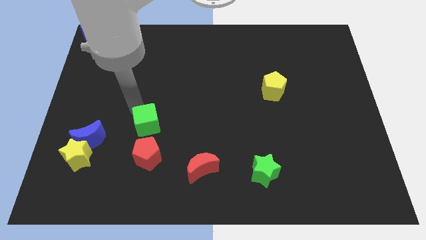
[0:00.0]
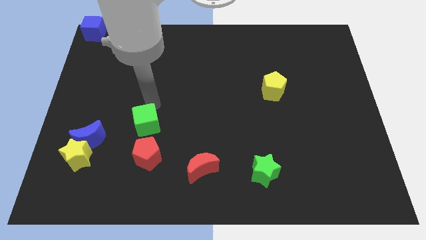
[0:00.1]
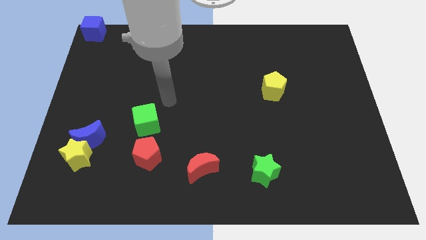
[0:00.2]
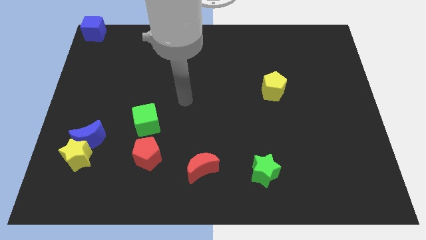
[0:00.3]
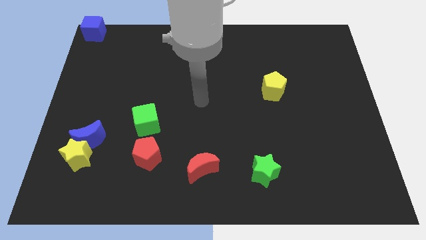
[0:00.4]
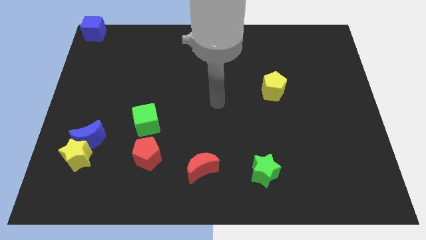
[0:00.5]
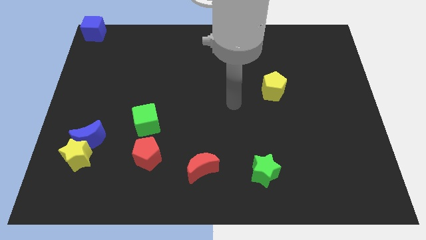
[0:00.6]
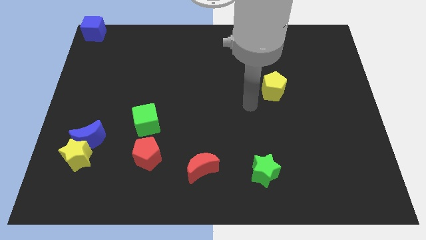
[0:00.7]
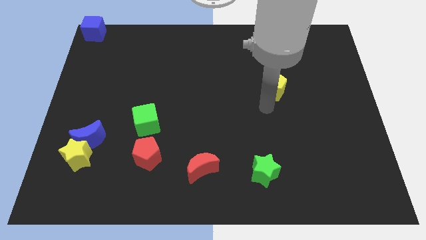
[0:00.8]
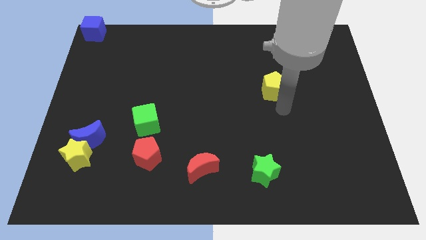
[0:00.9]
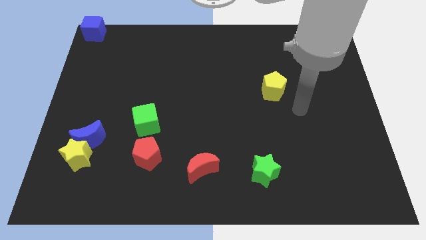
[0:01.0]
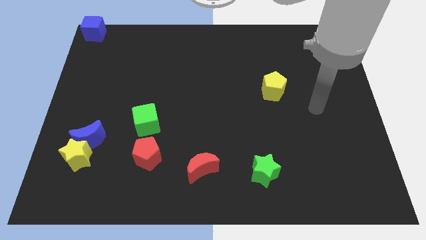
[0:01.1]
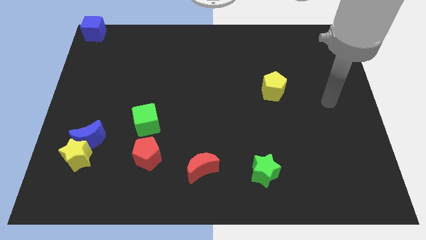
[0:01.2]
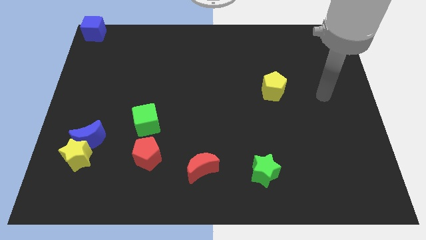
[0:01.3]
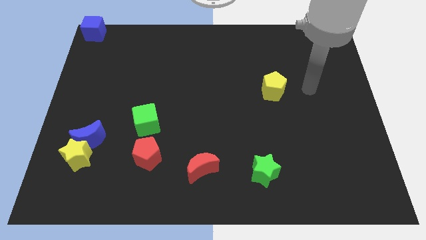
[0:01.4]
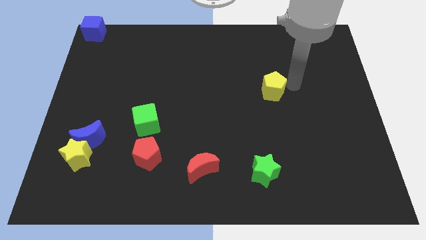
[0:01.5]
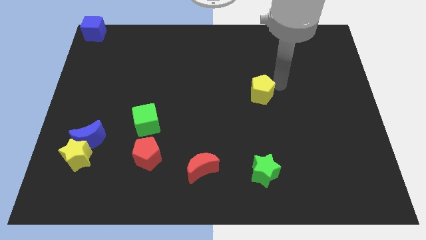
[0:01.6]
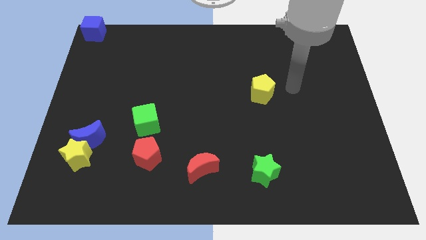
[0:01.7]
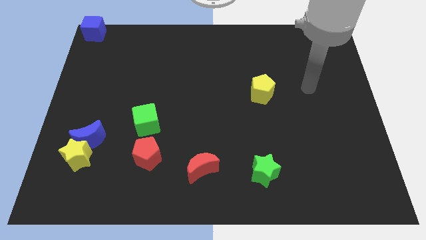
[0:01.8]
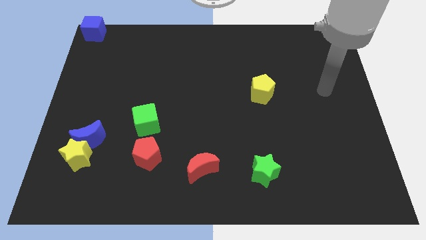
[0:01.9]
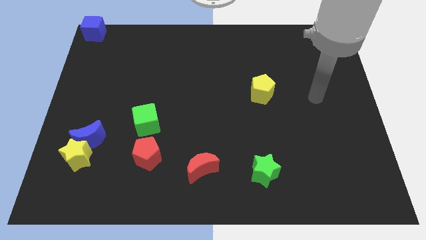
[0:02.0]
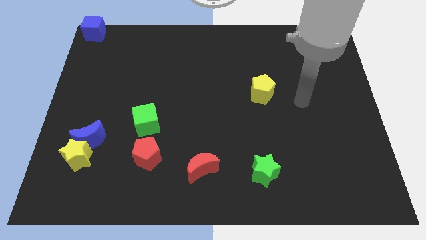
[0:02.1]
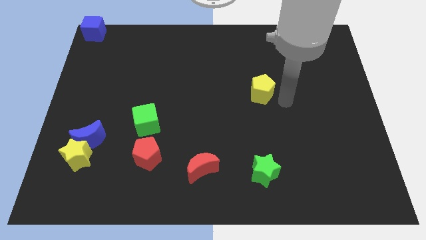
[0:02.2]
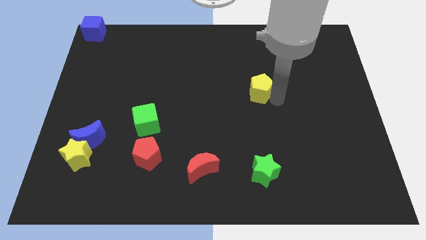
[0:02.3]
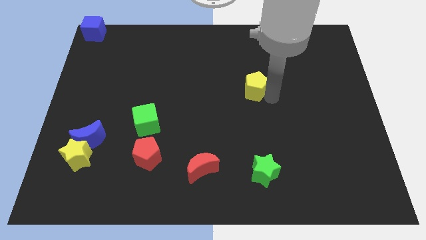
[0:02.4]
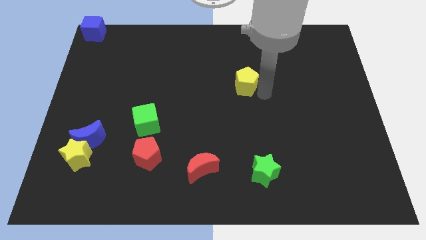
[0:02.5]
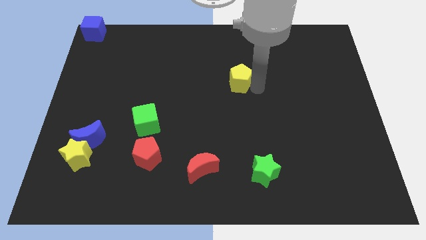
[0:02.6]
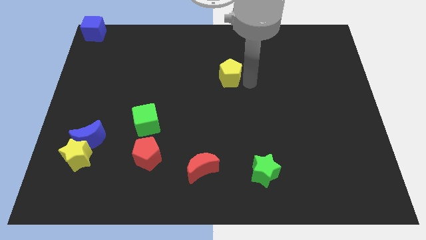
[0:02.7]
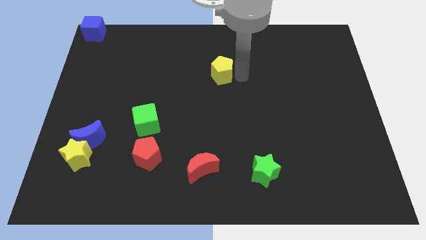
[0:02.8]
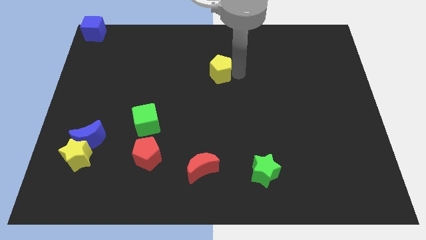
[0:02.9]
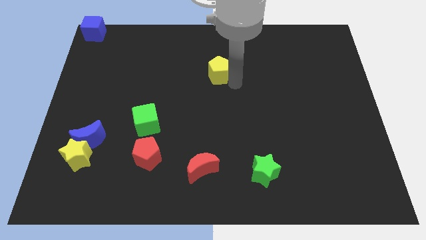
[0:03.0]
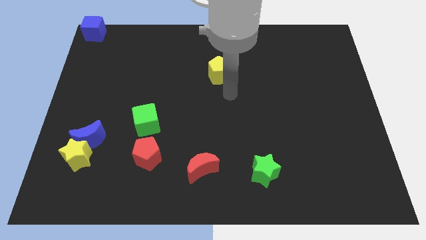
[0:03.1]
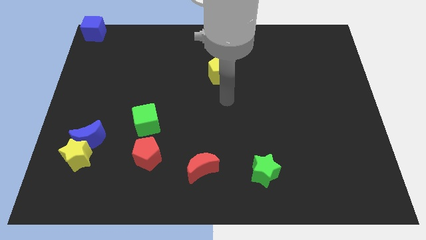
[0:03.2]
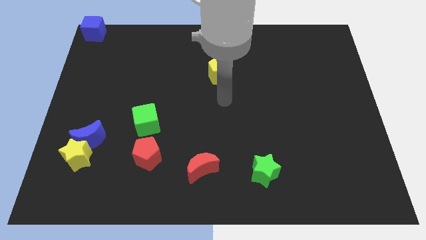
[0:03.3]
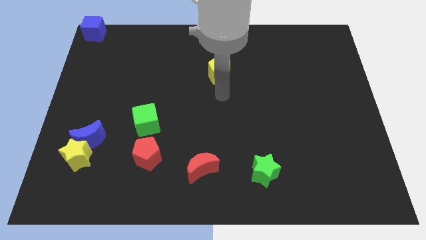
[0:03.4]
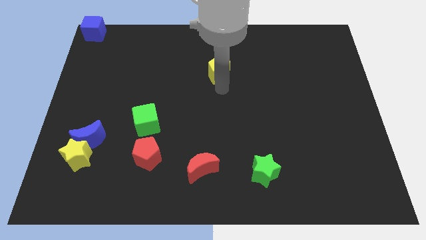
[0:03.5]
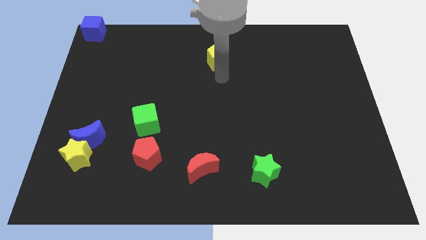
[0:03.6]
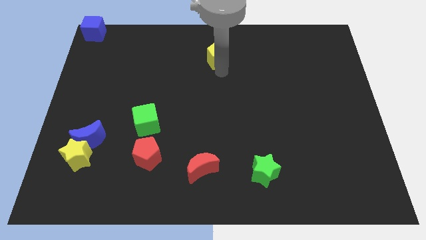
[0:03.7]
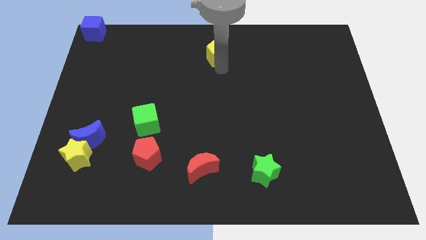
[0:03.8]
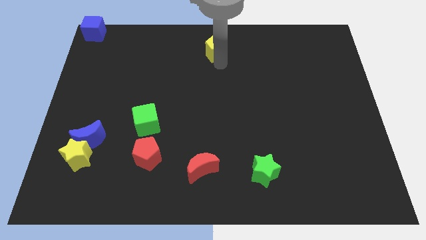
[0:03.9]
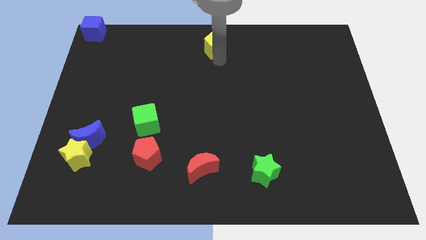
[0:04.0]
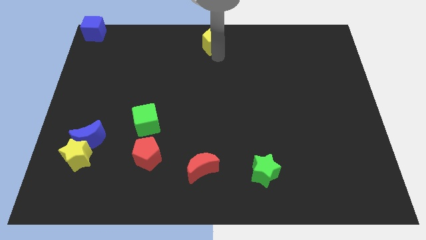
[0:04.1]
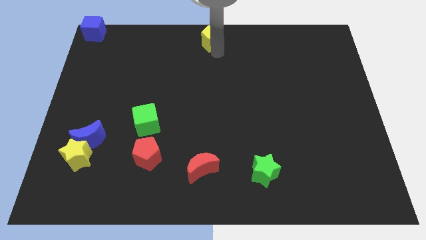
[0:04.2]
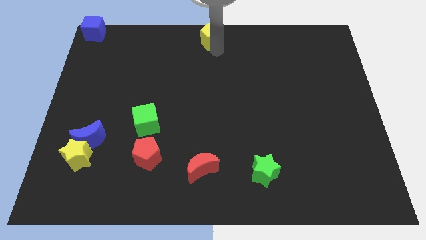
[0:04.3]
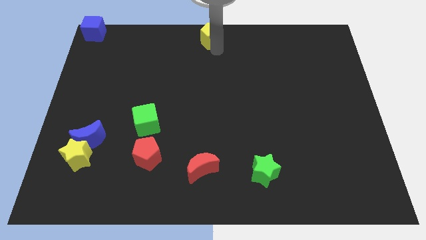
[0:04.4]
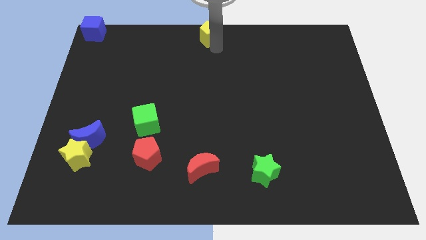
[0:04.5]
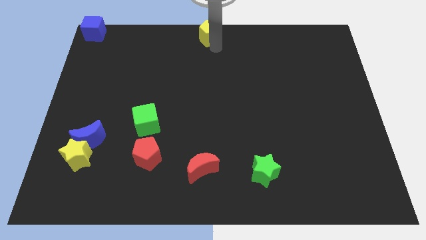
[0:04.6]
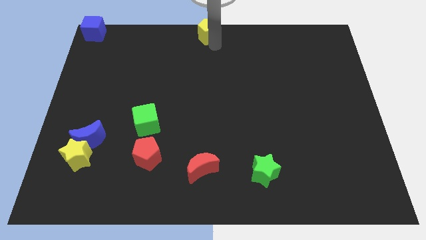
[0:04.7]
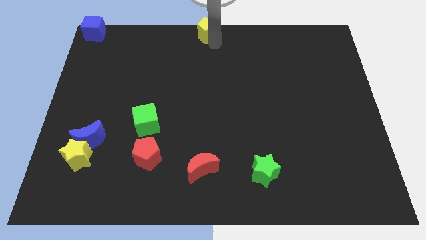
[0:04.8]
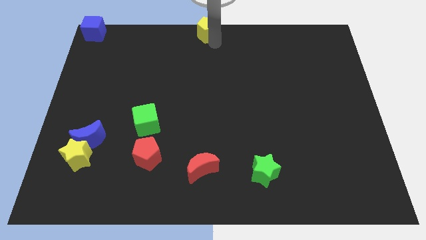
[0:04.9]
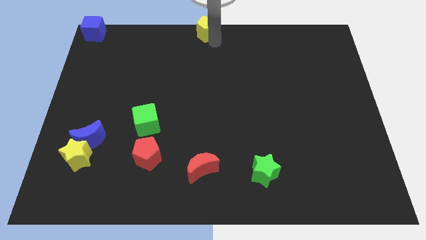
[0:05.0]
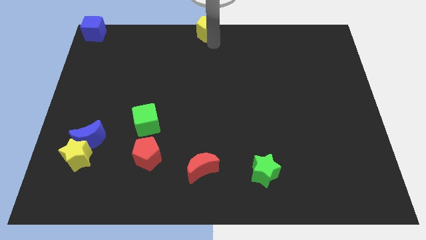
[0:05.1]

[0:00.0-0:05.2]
push the yellow pentagon to the top center of the table

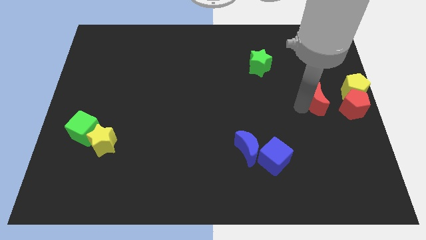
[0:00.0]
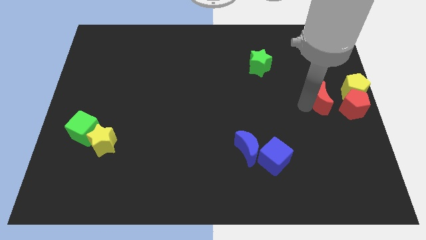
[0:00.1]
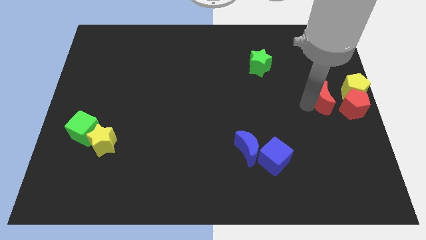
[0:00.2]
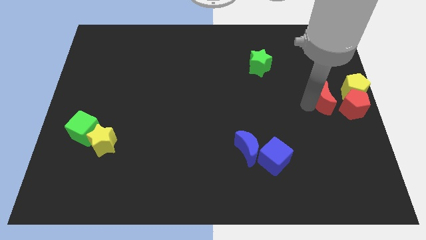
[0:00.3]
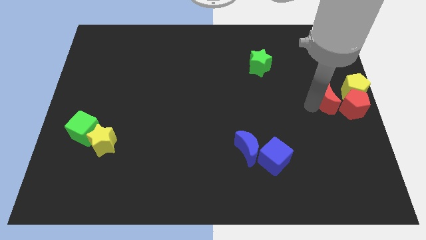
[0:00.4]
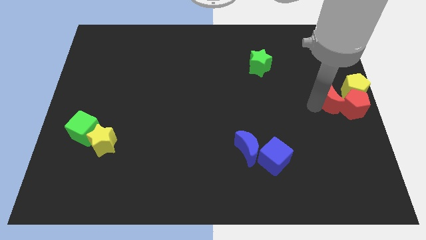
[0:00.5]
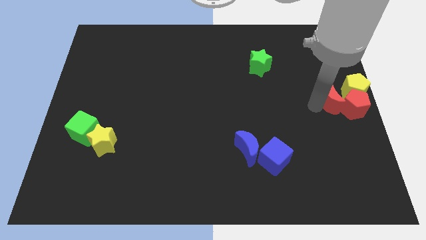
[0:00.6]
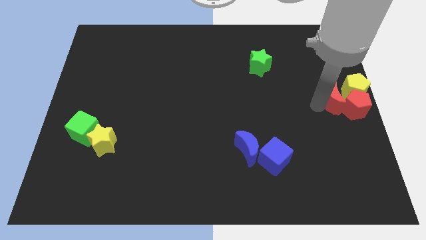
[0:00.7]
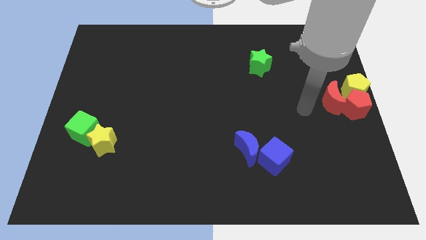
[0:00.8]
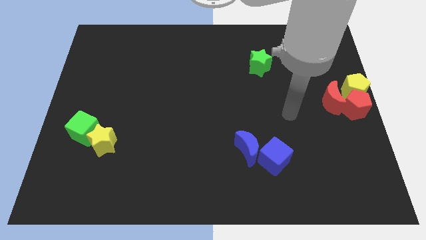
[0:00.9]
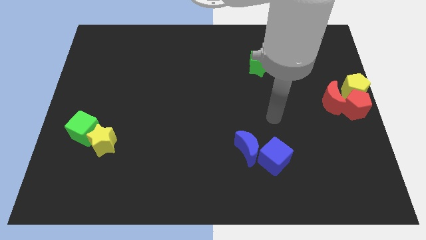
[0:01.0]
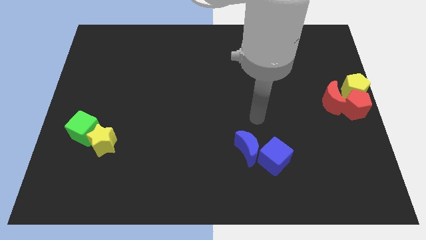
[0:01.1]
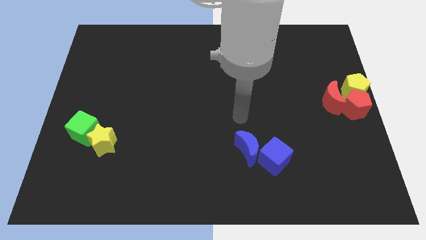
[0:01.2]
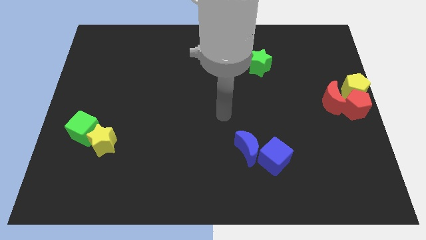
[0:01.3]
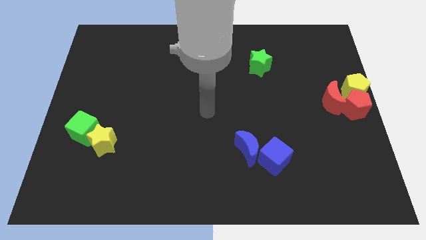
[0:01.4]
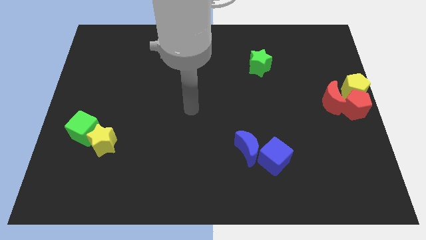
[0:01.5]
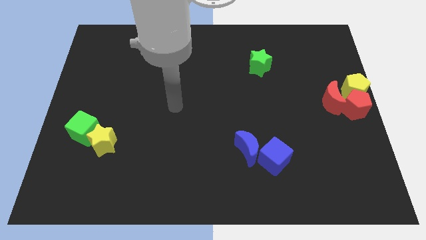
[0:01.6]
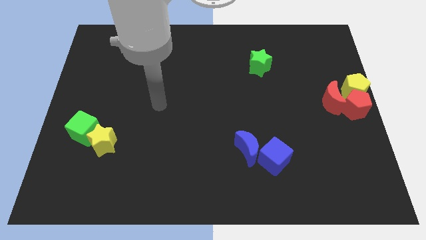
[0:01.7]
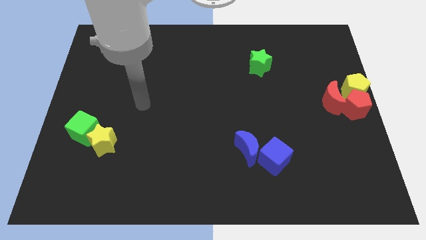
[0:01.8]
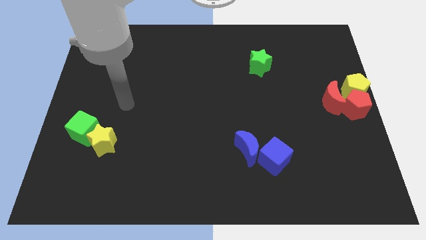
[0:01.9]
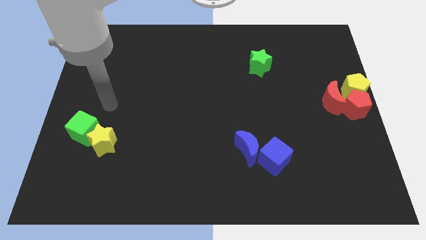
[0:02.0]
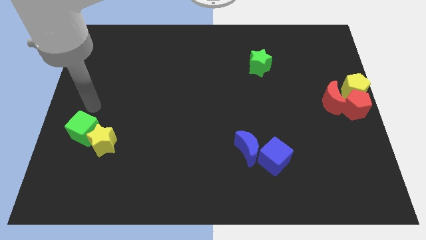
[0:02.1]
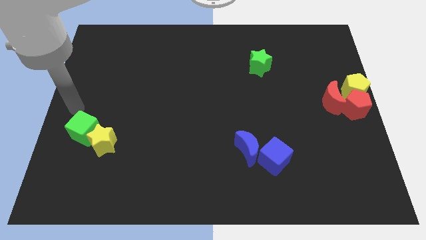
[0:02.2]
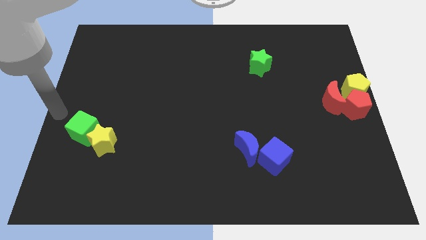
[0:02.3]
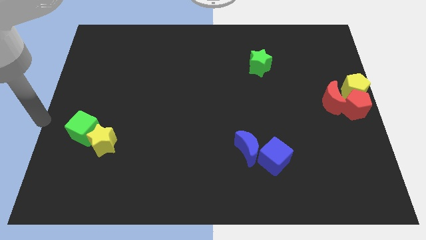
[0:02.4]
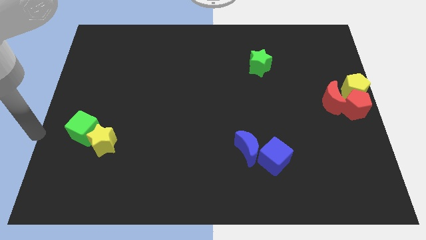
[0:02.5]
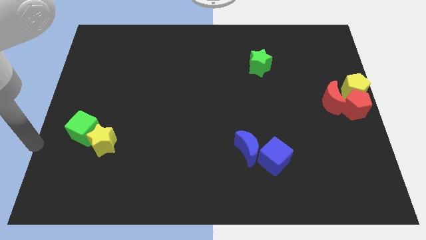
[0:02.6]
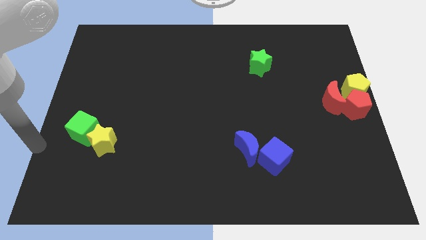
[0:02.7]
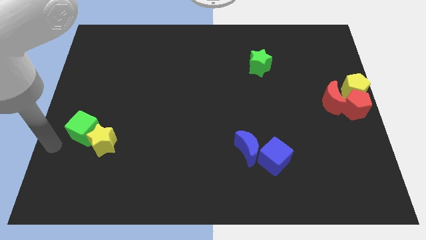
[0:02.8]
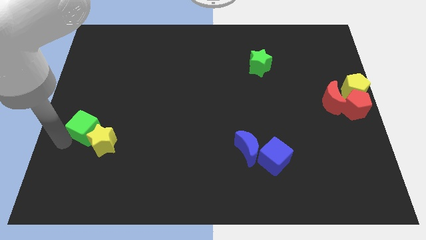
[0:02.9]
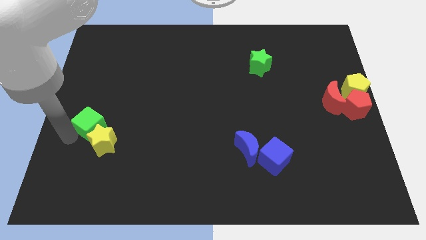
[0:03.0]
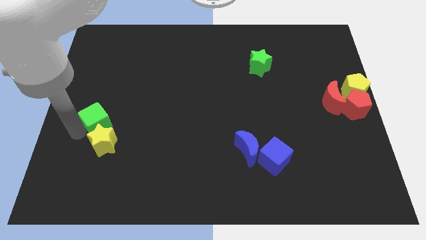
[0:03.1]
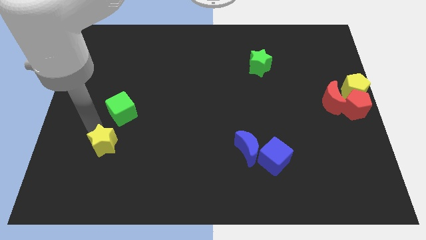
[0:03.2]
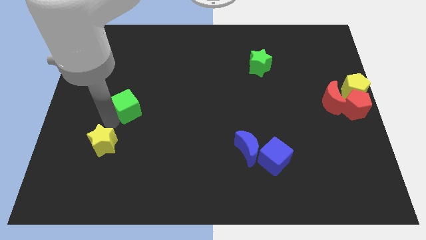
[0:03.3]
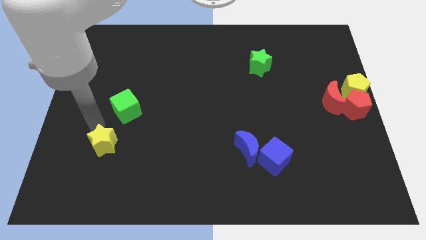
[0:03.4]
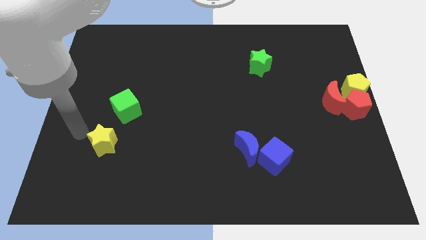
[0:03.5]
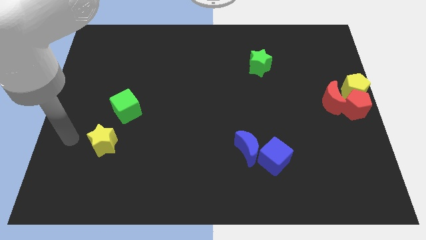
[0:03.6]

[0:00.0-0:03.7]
separate the green cube from the yellow star

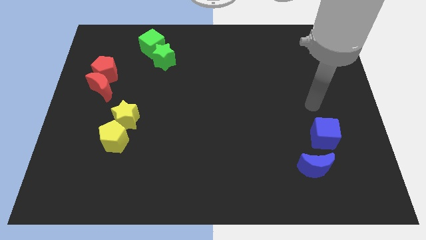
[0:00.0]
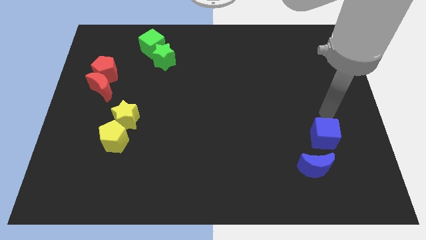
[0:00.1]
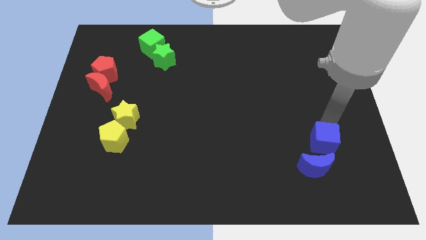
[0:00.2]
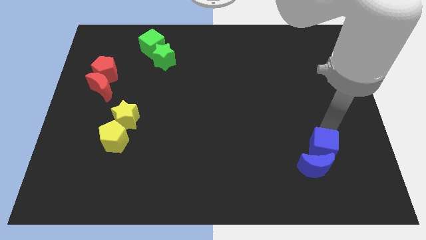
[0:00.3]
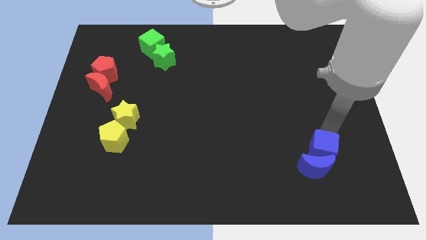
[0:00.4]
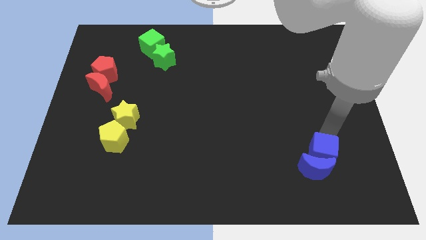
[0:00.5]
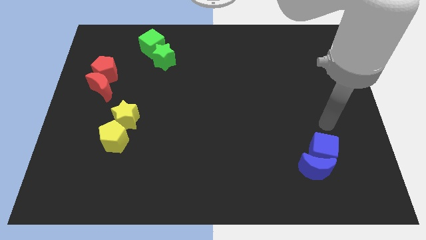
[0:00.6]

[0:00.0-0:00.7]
push the blue cube into the blue moon
